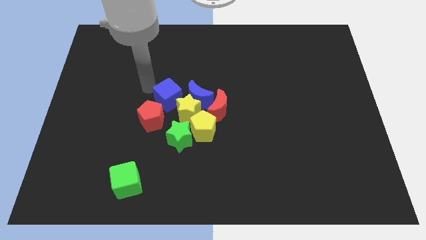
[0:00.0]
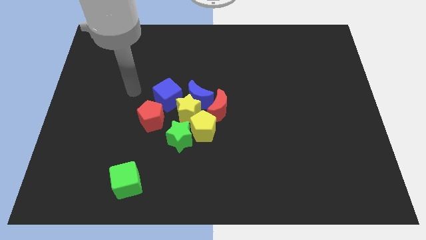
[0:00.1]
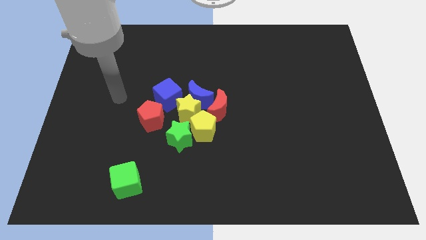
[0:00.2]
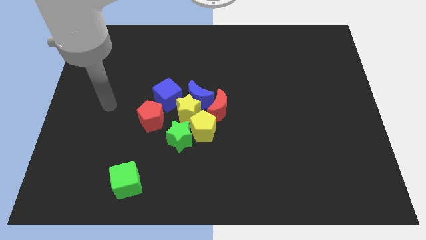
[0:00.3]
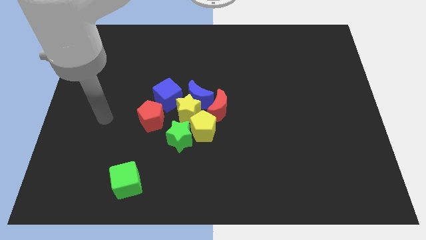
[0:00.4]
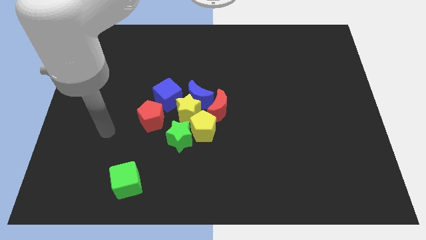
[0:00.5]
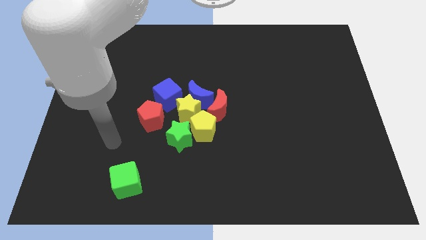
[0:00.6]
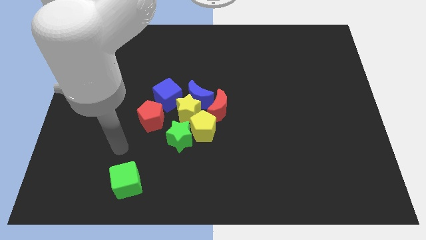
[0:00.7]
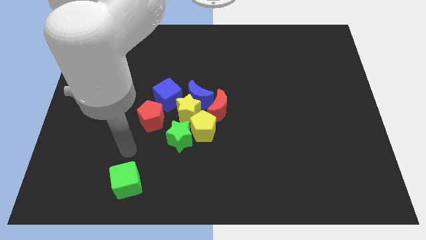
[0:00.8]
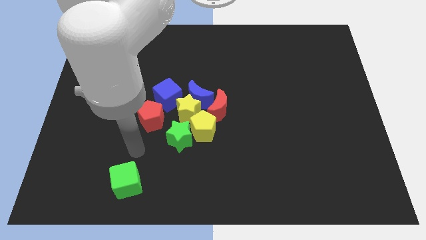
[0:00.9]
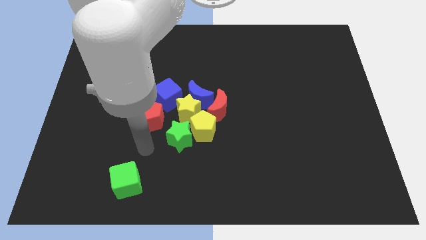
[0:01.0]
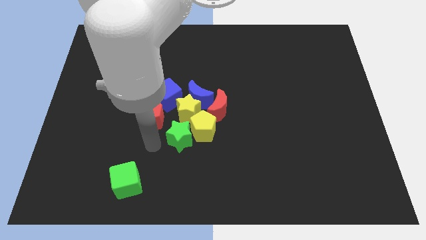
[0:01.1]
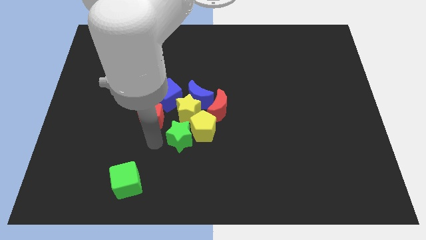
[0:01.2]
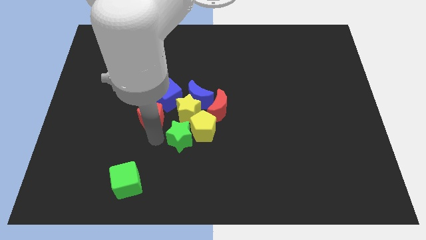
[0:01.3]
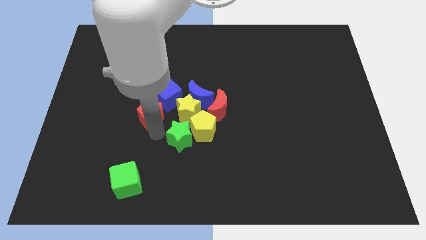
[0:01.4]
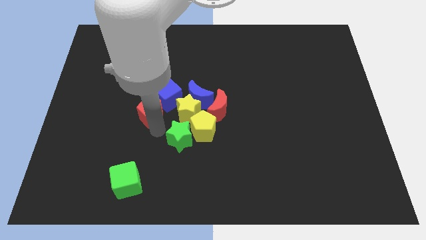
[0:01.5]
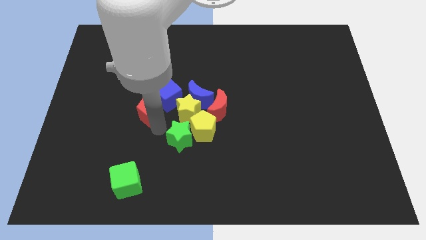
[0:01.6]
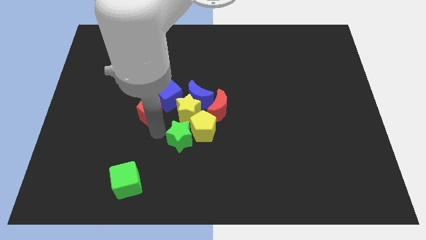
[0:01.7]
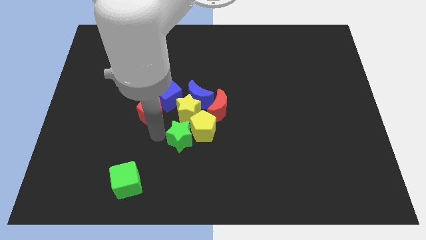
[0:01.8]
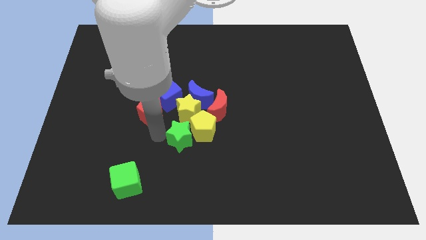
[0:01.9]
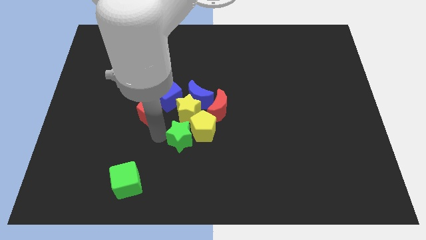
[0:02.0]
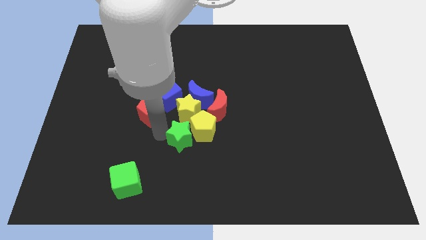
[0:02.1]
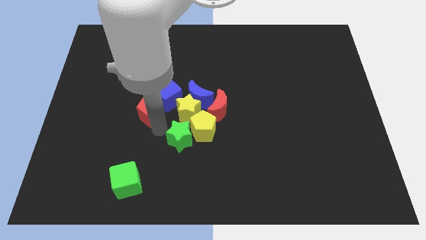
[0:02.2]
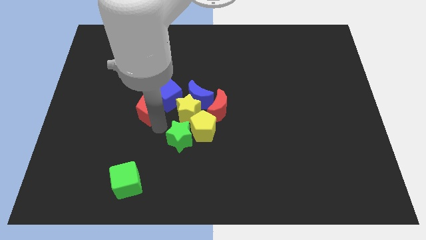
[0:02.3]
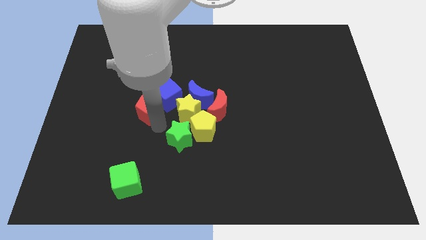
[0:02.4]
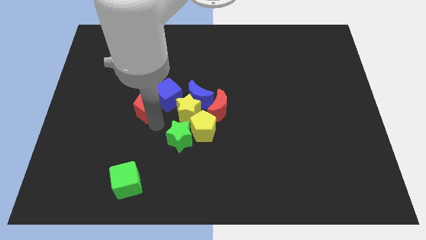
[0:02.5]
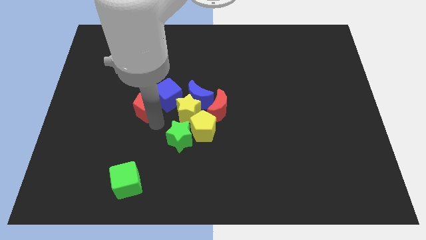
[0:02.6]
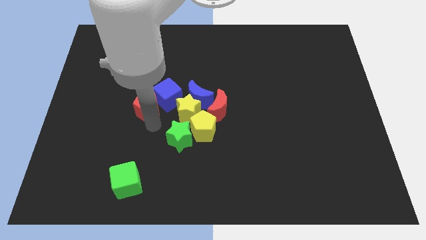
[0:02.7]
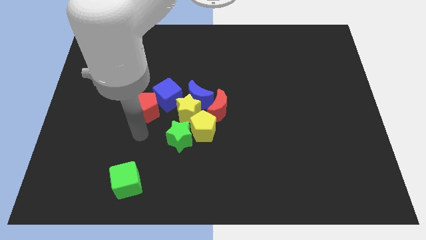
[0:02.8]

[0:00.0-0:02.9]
move the red pentagon to the bottom left of the blue cube

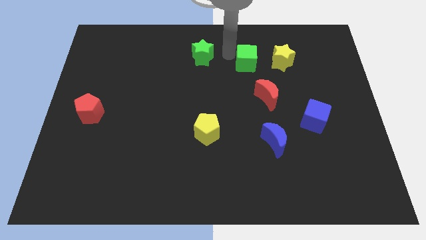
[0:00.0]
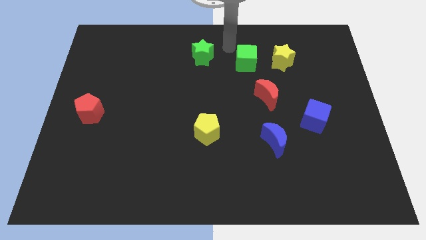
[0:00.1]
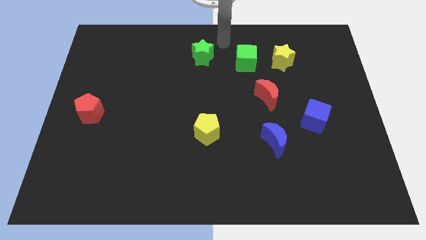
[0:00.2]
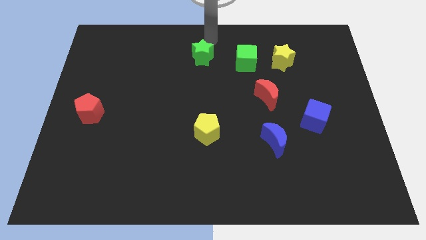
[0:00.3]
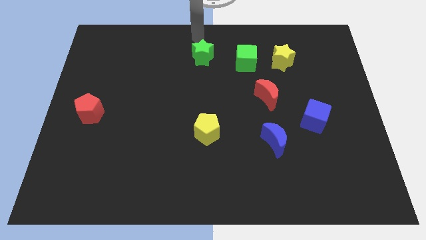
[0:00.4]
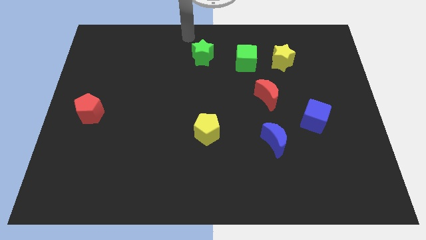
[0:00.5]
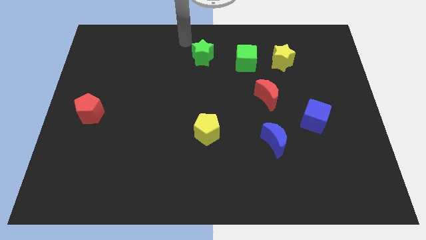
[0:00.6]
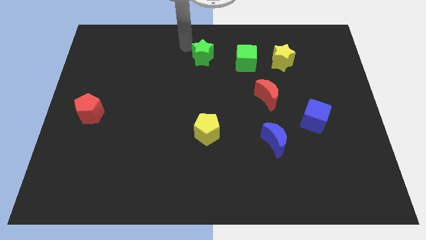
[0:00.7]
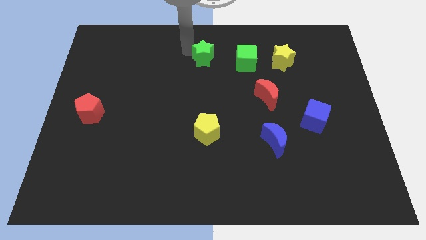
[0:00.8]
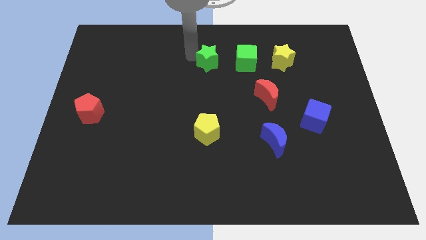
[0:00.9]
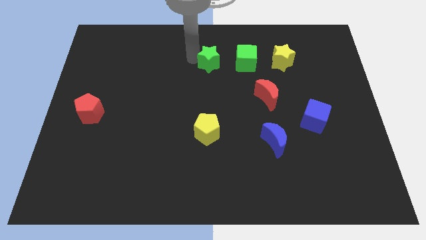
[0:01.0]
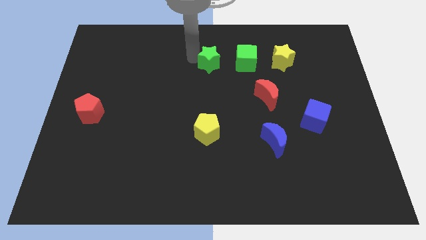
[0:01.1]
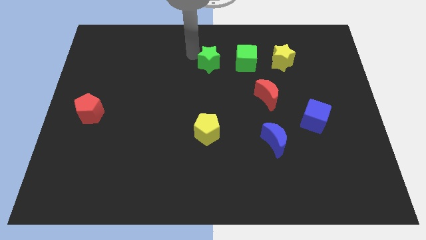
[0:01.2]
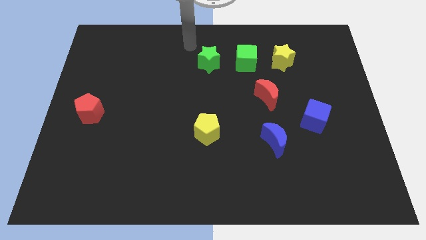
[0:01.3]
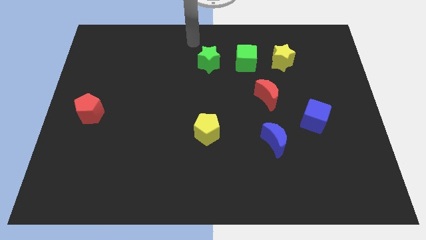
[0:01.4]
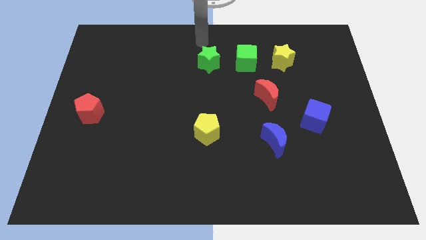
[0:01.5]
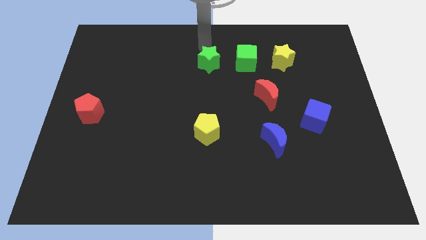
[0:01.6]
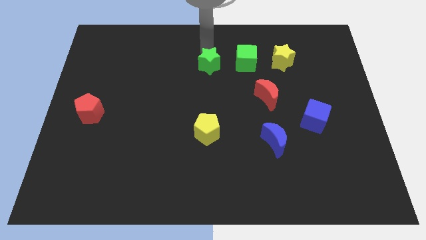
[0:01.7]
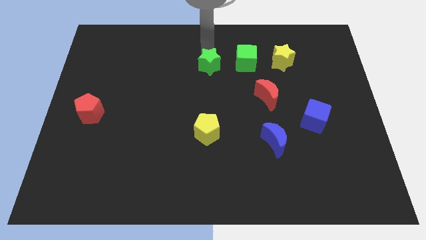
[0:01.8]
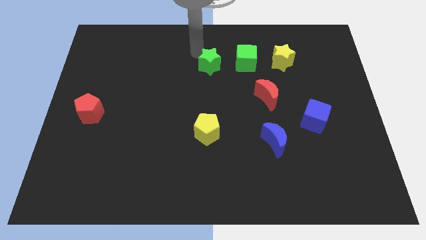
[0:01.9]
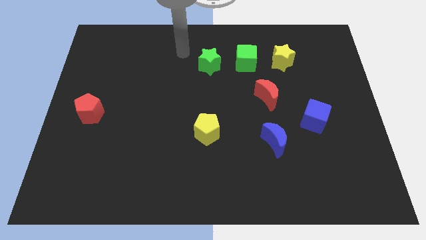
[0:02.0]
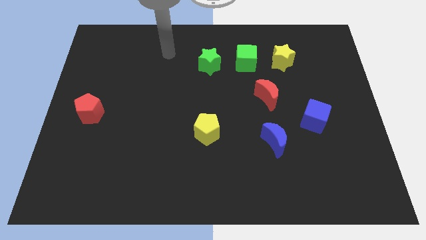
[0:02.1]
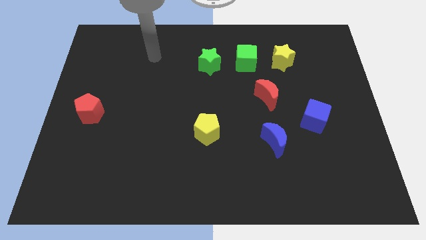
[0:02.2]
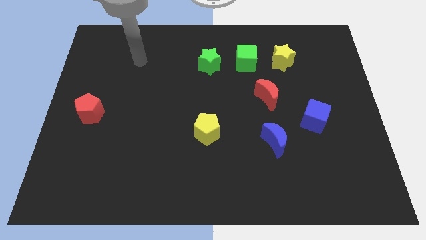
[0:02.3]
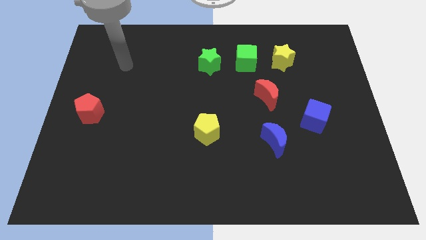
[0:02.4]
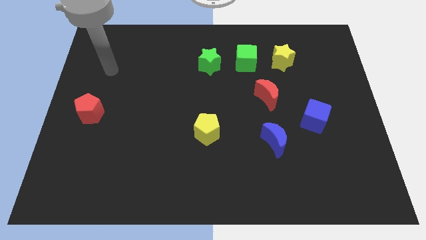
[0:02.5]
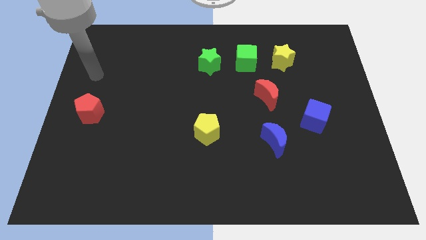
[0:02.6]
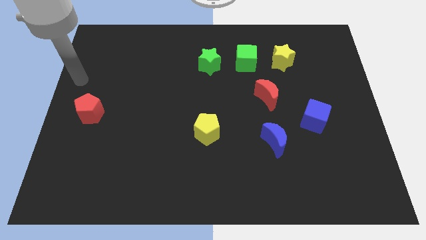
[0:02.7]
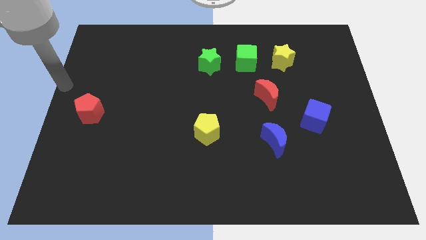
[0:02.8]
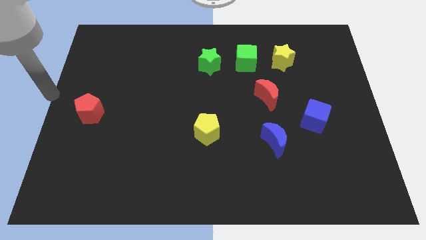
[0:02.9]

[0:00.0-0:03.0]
put the green star to the left side of green cube and move away

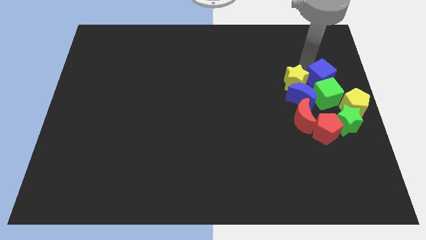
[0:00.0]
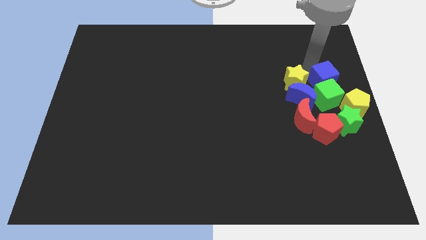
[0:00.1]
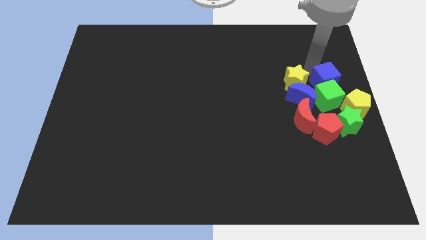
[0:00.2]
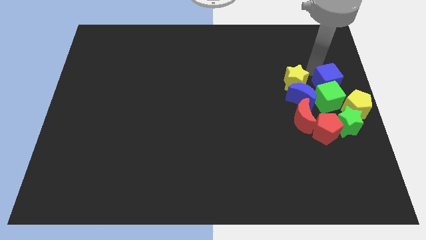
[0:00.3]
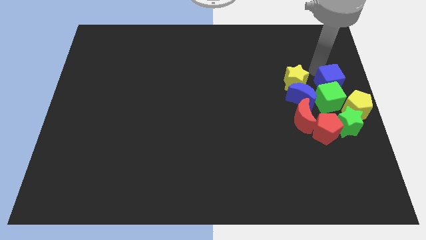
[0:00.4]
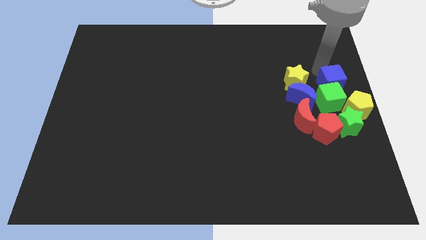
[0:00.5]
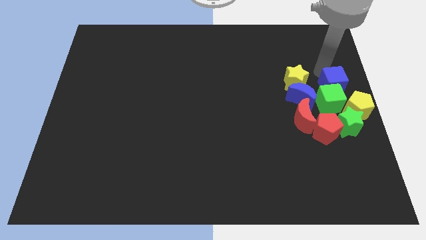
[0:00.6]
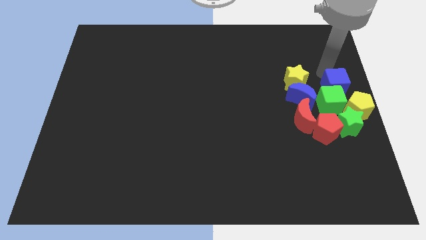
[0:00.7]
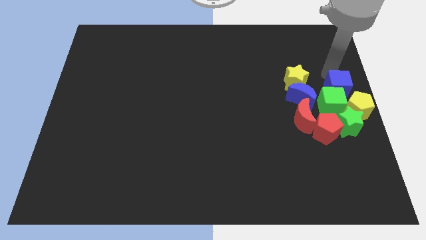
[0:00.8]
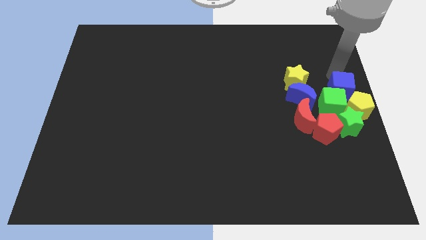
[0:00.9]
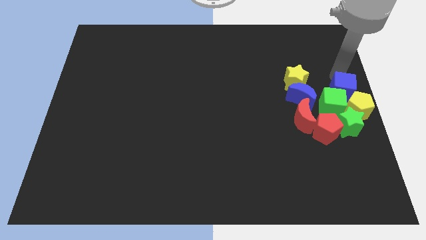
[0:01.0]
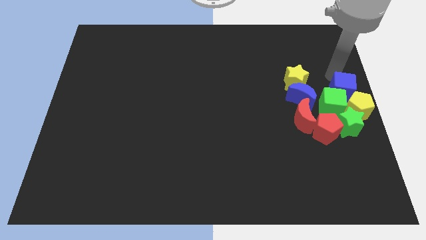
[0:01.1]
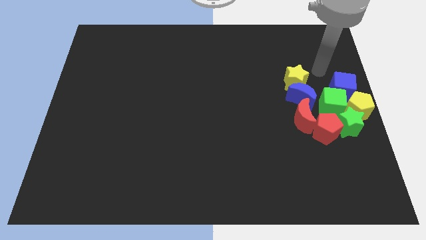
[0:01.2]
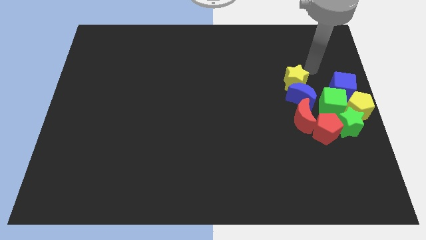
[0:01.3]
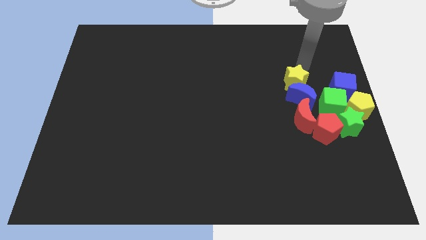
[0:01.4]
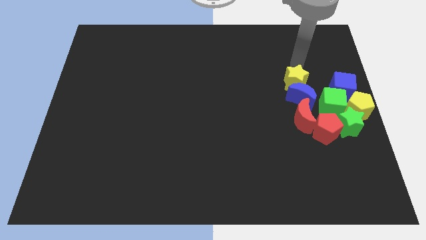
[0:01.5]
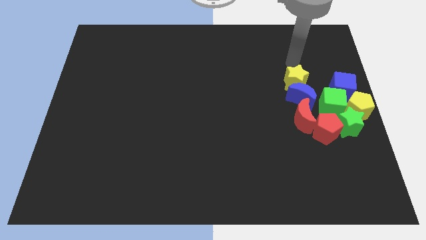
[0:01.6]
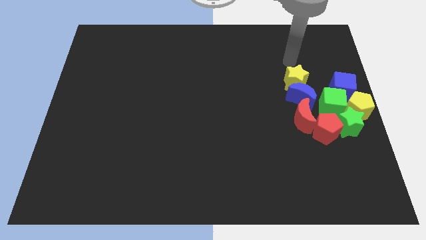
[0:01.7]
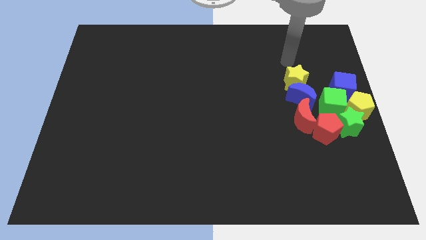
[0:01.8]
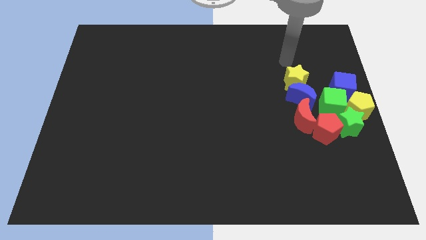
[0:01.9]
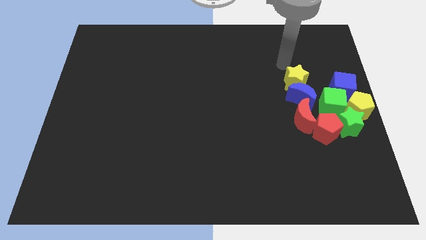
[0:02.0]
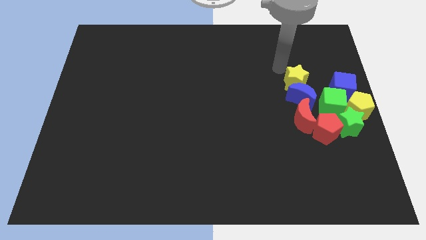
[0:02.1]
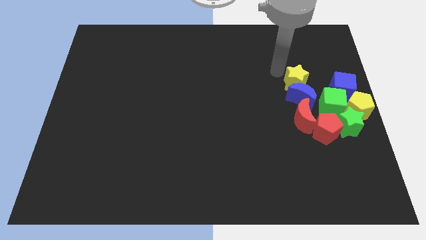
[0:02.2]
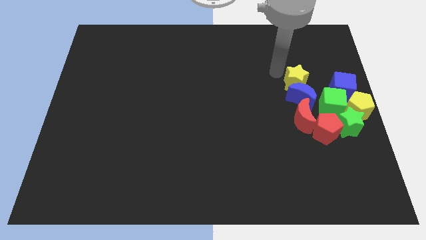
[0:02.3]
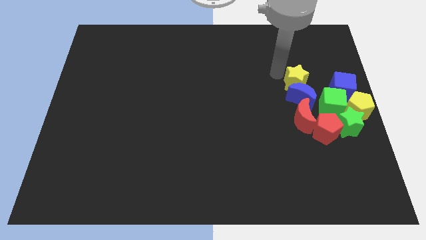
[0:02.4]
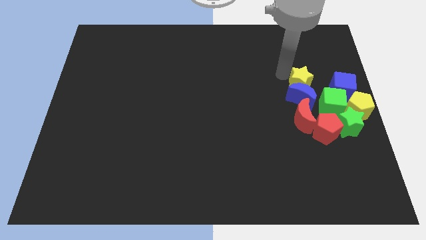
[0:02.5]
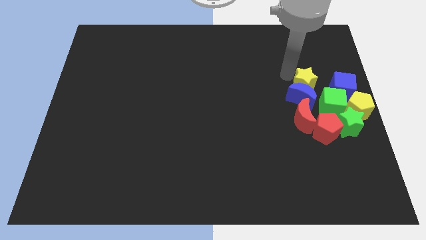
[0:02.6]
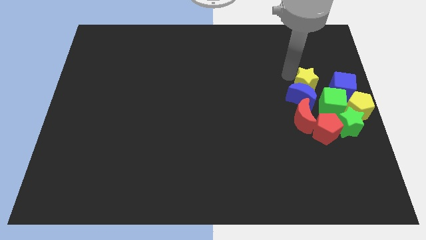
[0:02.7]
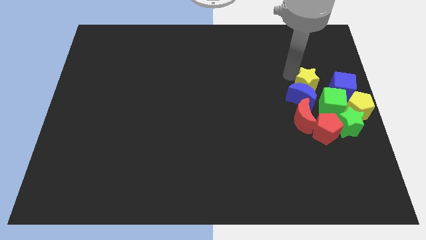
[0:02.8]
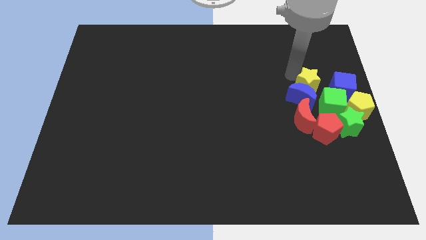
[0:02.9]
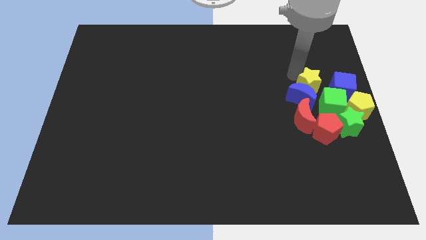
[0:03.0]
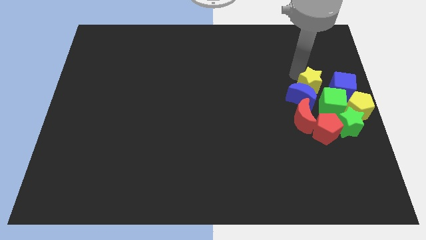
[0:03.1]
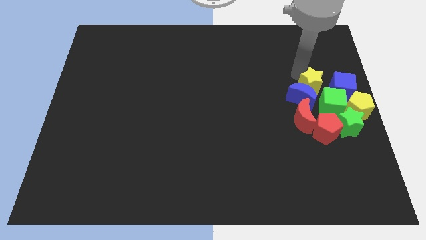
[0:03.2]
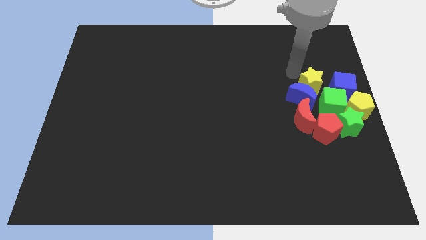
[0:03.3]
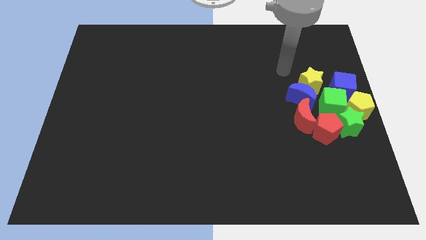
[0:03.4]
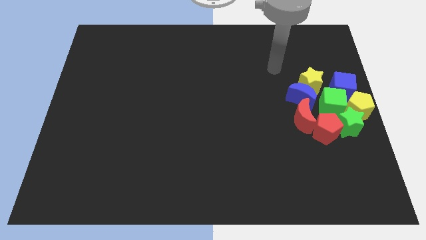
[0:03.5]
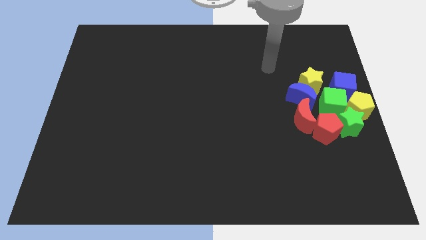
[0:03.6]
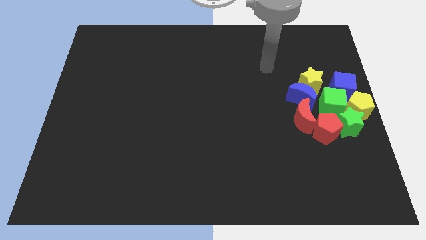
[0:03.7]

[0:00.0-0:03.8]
move the yellow star to the top left of the green cube
